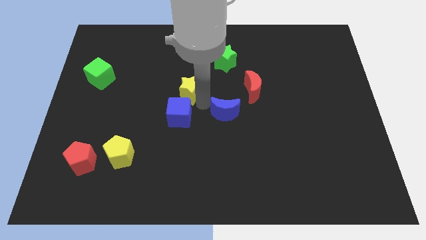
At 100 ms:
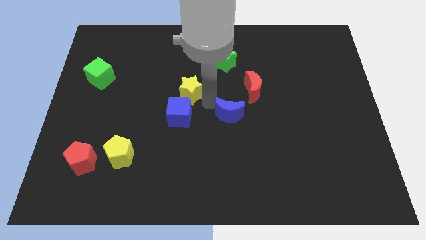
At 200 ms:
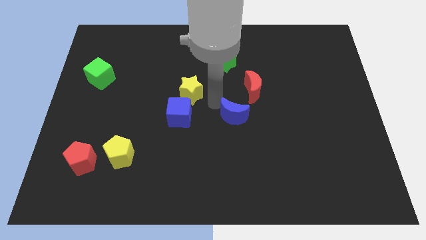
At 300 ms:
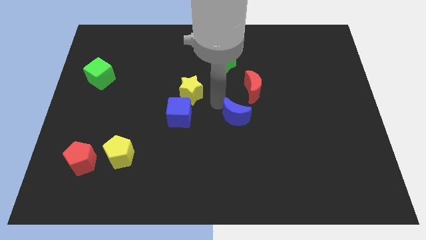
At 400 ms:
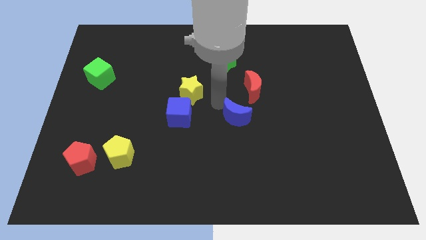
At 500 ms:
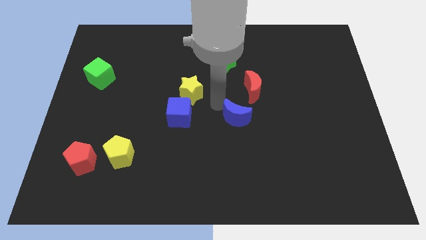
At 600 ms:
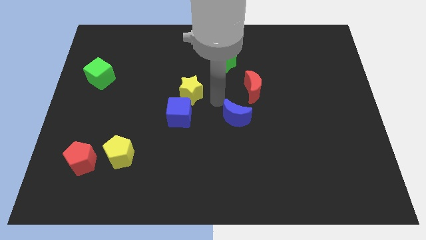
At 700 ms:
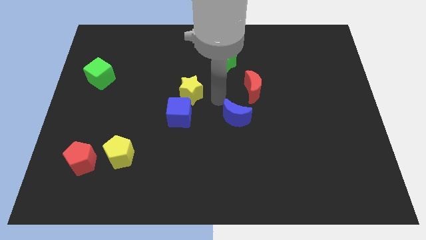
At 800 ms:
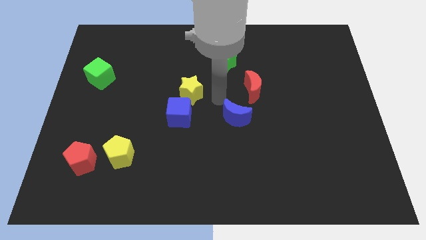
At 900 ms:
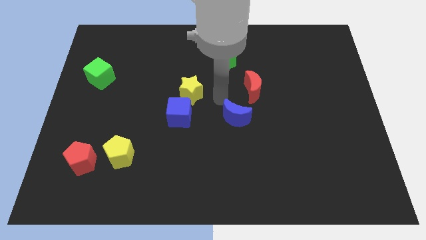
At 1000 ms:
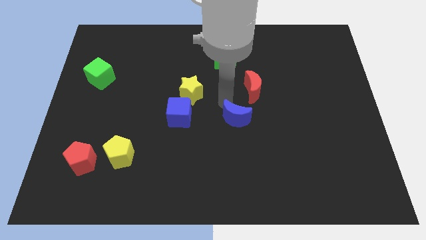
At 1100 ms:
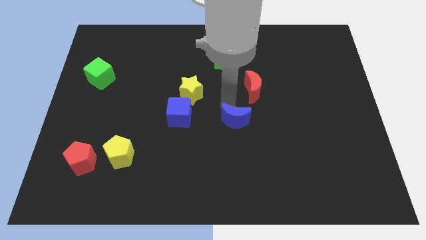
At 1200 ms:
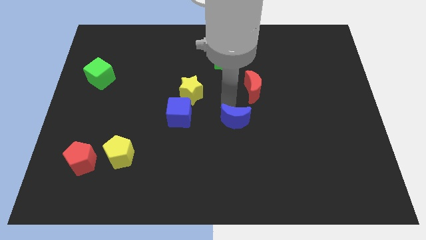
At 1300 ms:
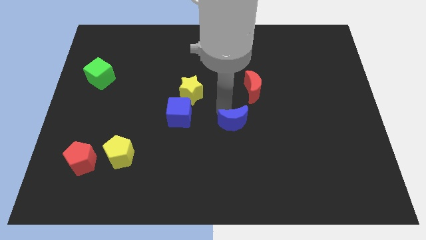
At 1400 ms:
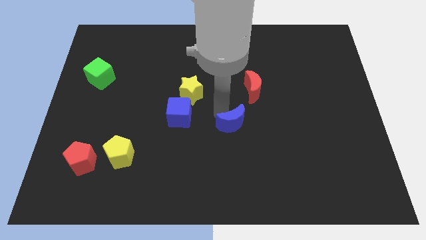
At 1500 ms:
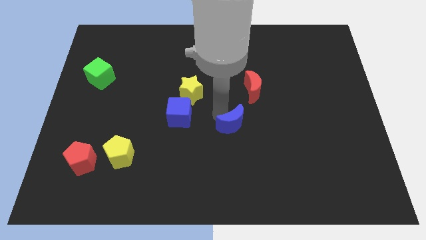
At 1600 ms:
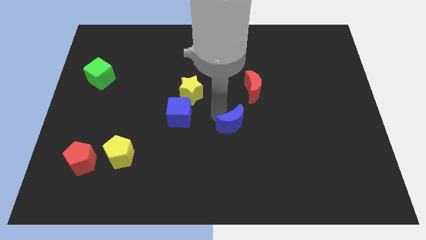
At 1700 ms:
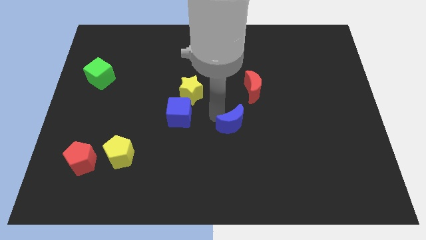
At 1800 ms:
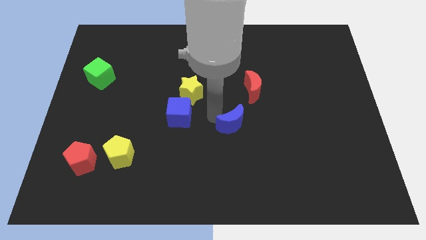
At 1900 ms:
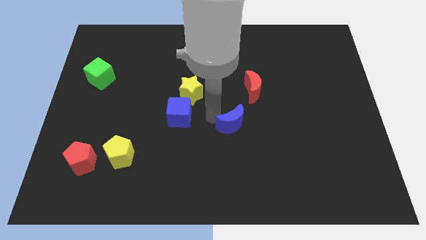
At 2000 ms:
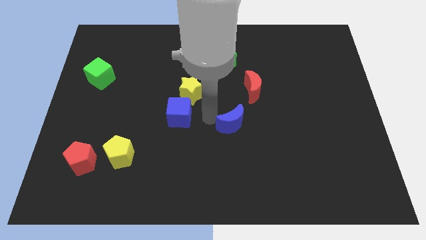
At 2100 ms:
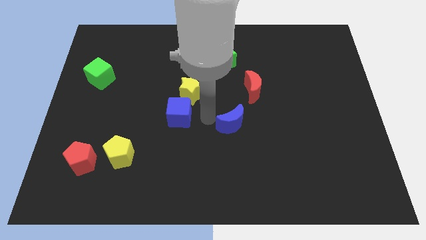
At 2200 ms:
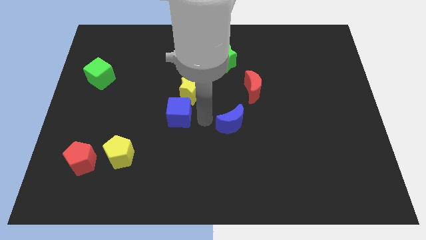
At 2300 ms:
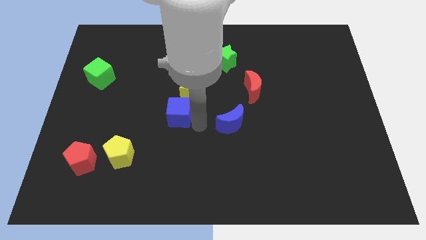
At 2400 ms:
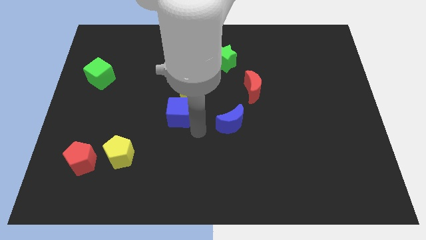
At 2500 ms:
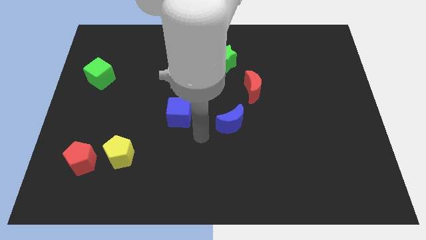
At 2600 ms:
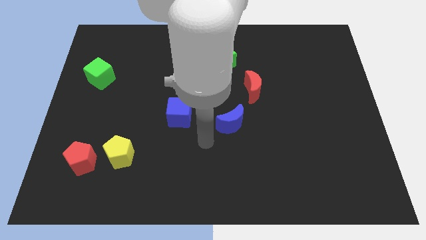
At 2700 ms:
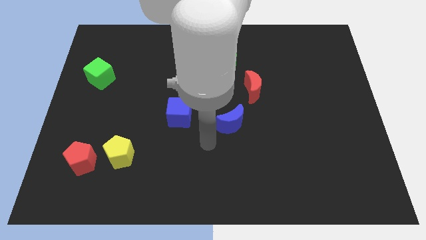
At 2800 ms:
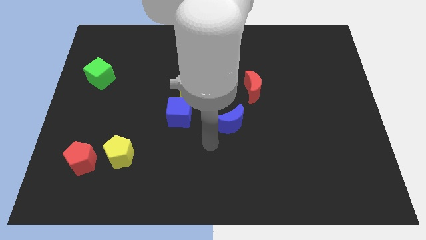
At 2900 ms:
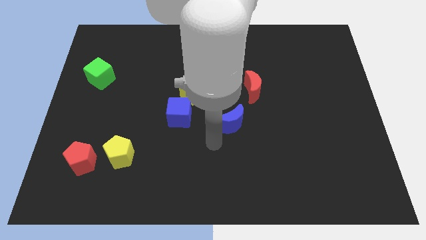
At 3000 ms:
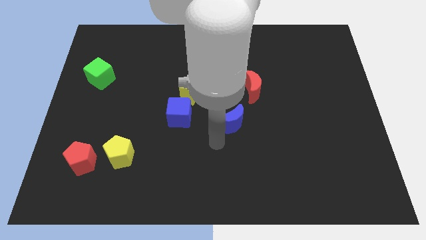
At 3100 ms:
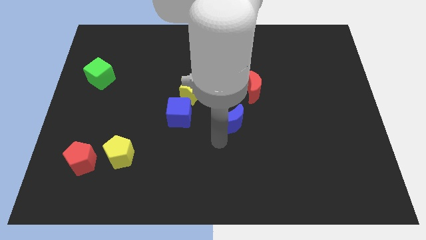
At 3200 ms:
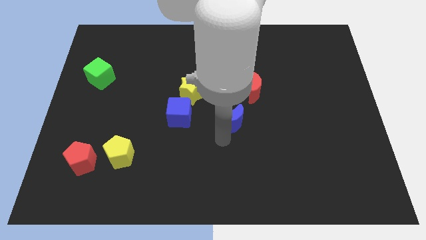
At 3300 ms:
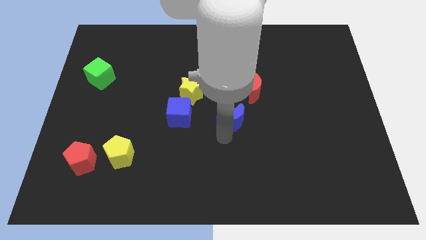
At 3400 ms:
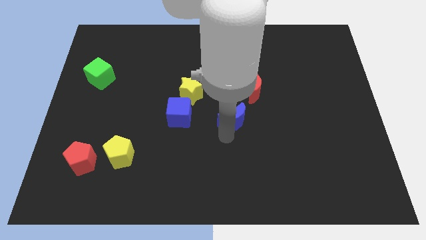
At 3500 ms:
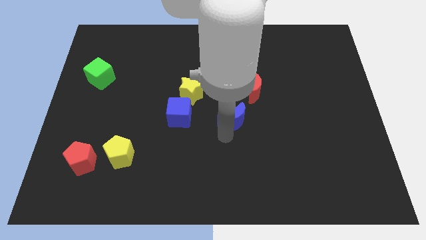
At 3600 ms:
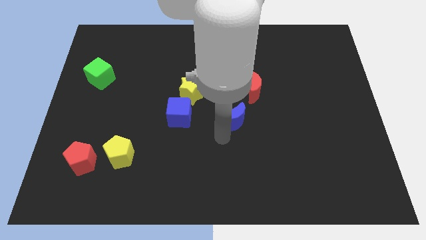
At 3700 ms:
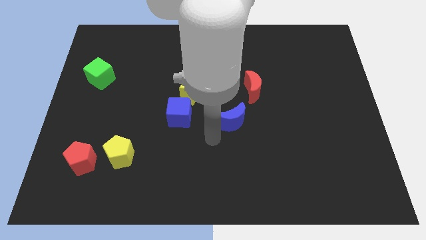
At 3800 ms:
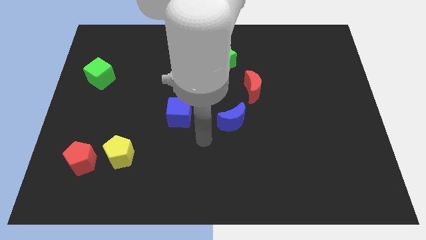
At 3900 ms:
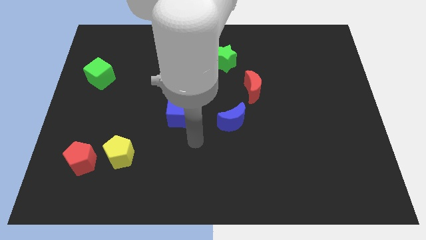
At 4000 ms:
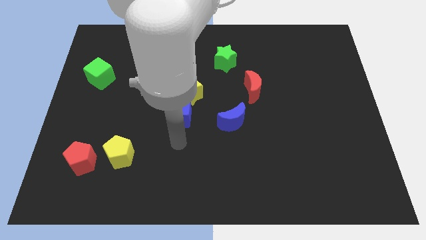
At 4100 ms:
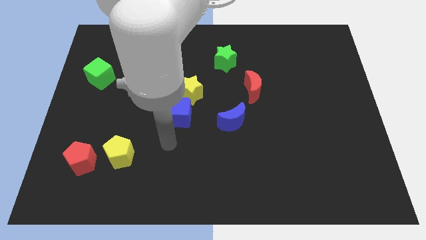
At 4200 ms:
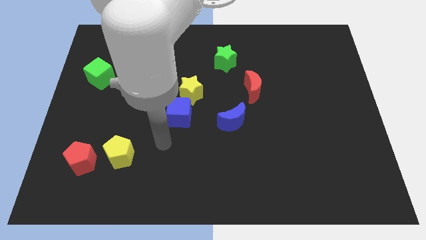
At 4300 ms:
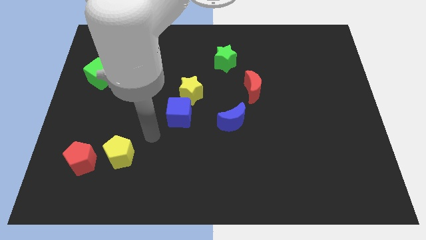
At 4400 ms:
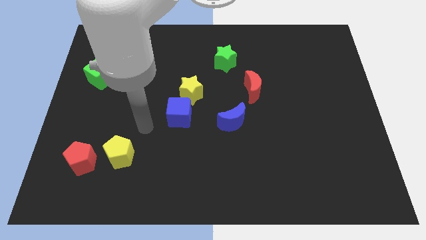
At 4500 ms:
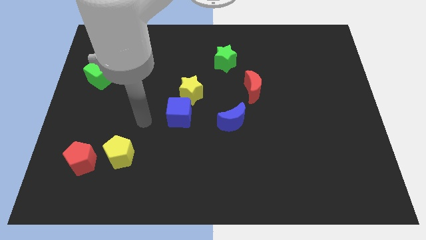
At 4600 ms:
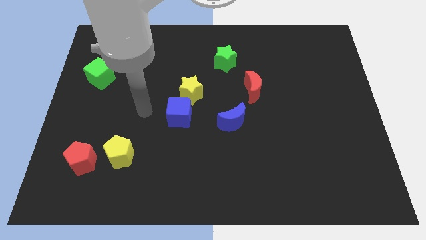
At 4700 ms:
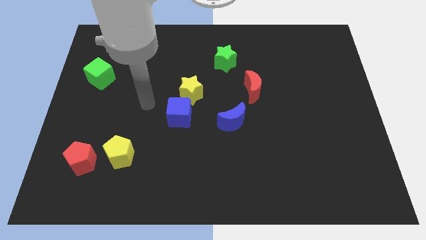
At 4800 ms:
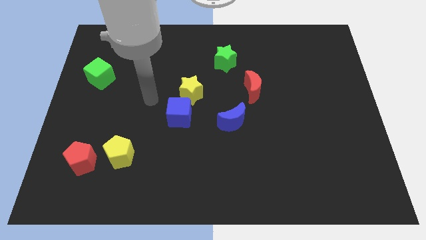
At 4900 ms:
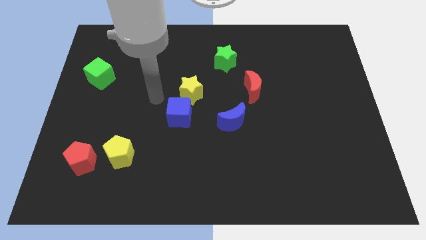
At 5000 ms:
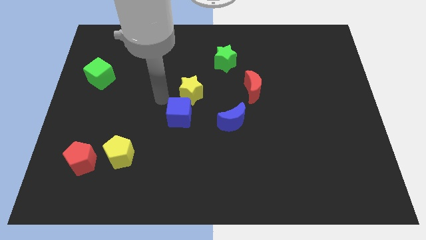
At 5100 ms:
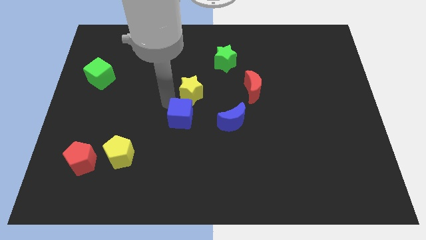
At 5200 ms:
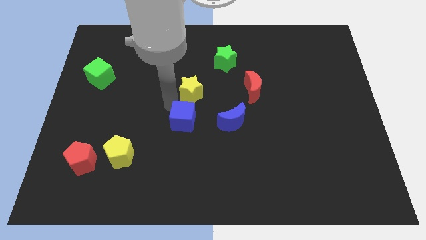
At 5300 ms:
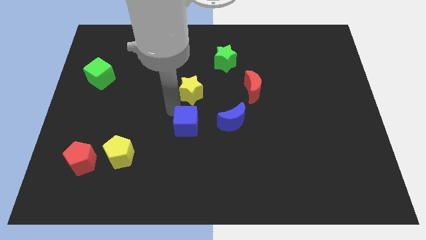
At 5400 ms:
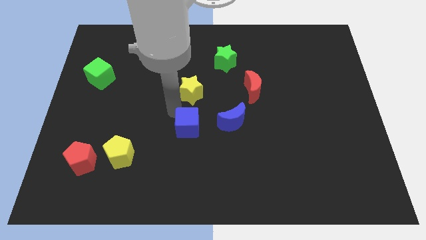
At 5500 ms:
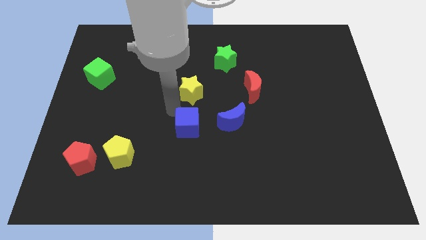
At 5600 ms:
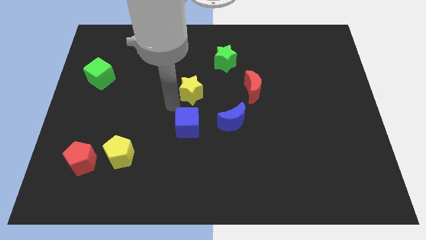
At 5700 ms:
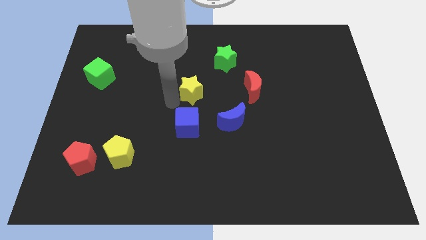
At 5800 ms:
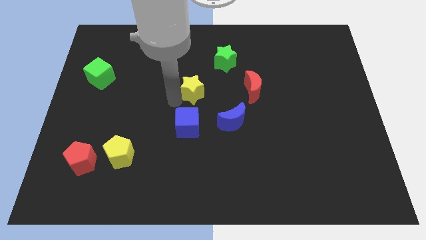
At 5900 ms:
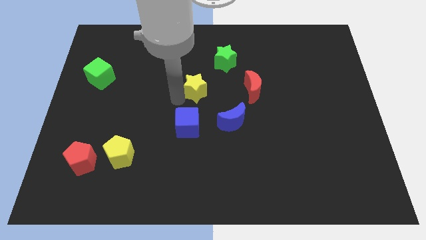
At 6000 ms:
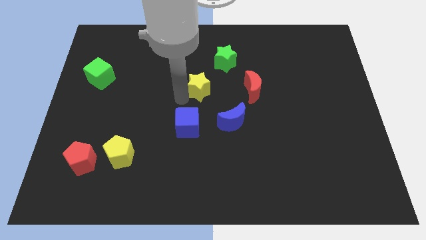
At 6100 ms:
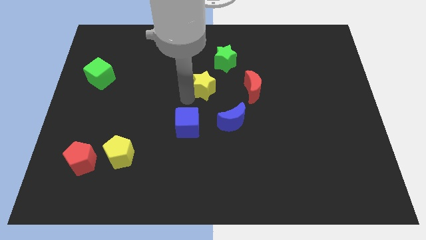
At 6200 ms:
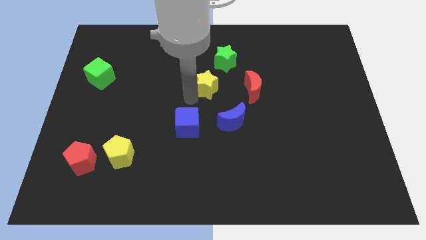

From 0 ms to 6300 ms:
push the yellow star to the left of the red crescent

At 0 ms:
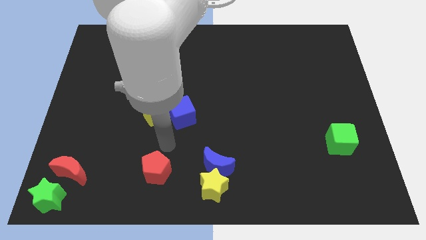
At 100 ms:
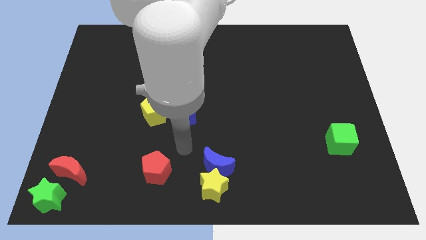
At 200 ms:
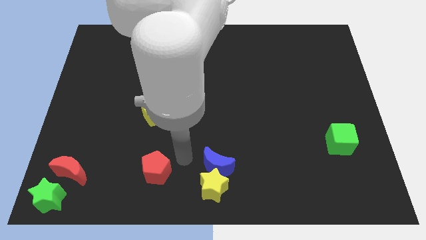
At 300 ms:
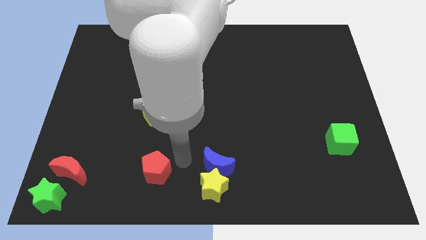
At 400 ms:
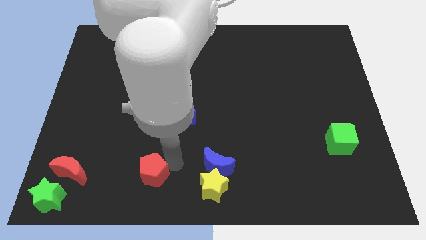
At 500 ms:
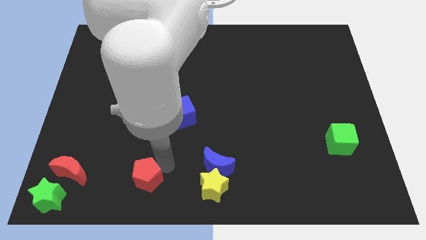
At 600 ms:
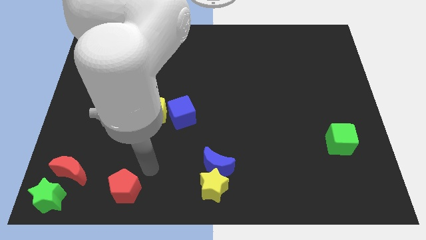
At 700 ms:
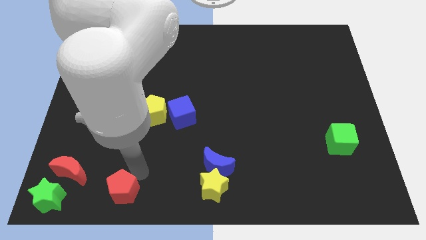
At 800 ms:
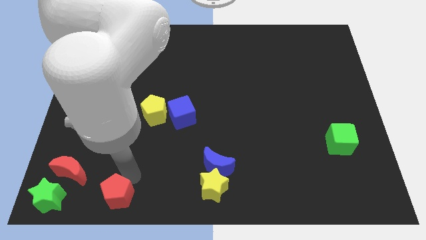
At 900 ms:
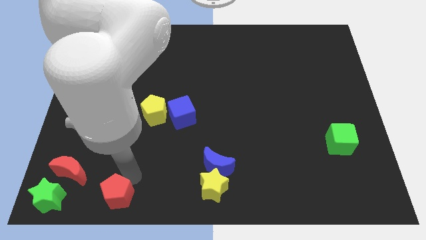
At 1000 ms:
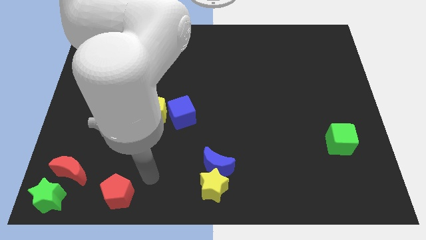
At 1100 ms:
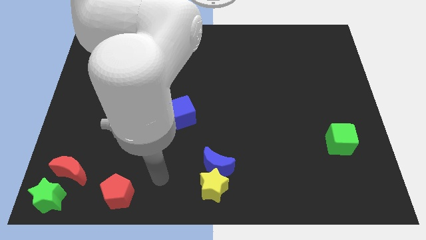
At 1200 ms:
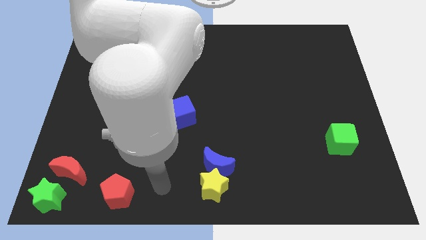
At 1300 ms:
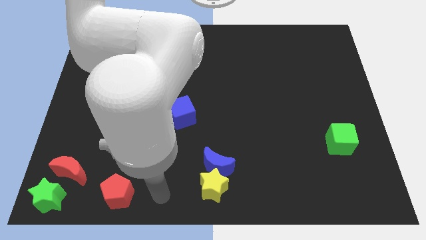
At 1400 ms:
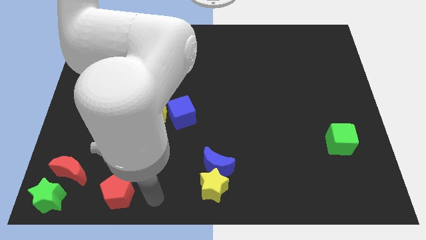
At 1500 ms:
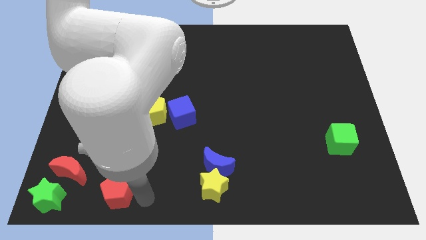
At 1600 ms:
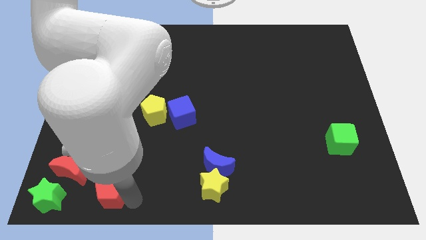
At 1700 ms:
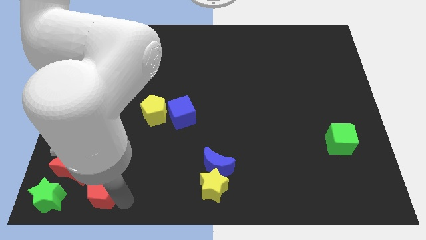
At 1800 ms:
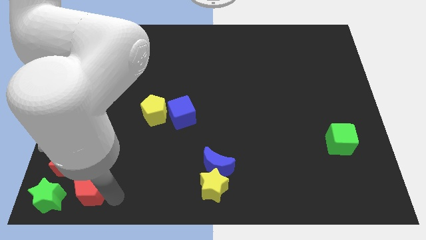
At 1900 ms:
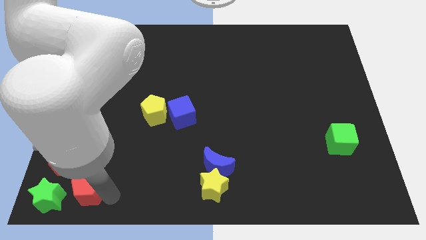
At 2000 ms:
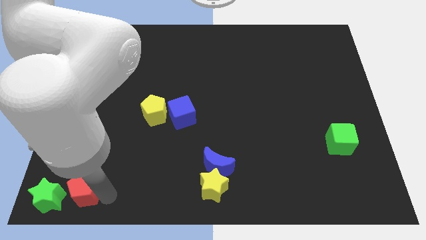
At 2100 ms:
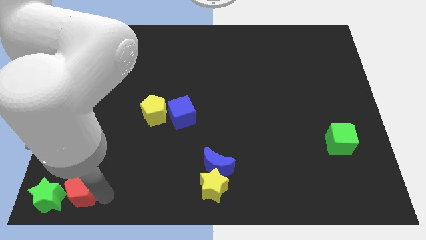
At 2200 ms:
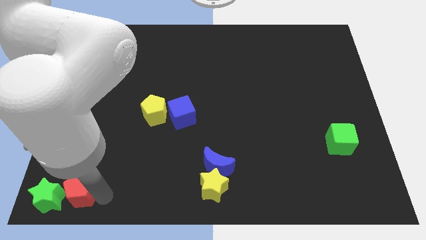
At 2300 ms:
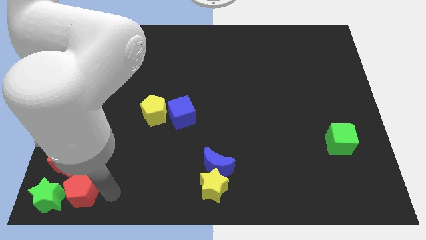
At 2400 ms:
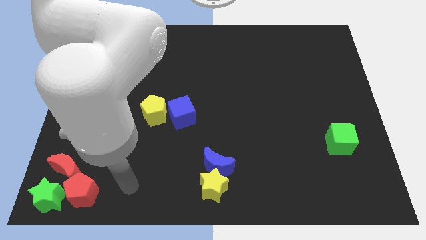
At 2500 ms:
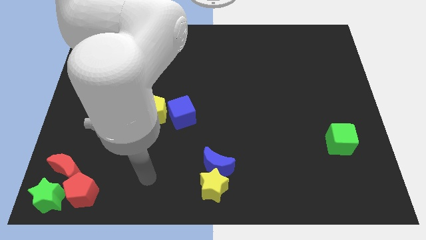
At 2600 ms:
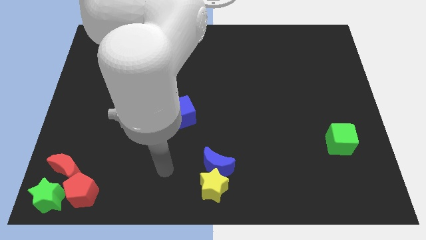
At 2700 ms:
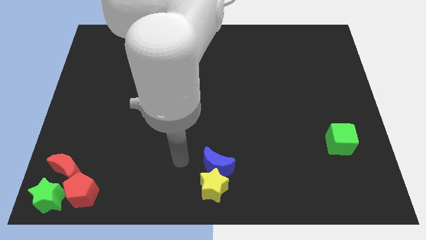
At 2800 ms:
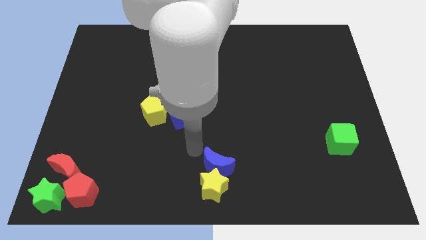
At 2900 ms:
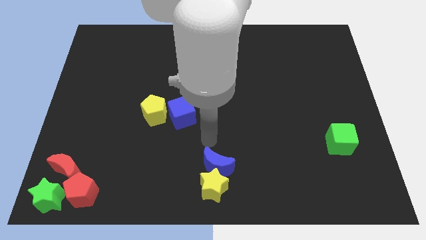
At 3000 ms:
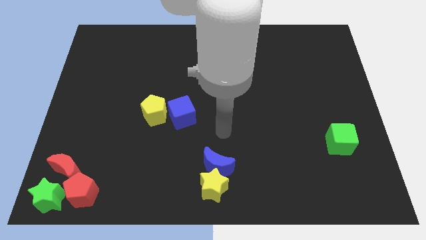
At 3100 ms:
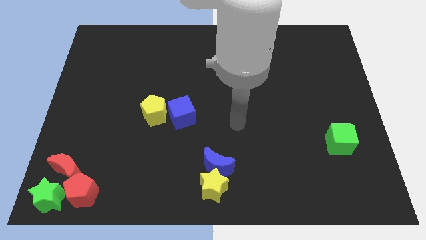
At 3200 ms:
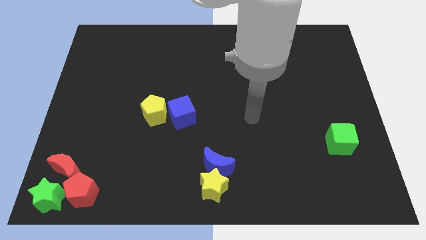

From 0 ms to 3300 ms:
push the red pentagon to the right side of the green star
